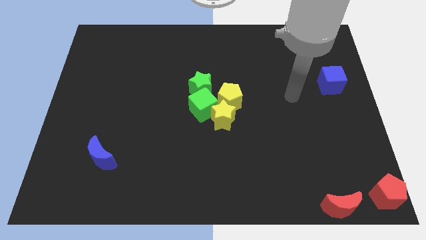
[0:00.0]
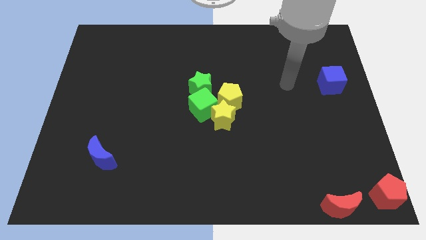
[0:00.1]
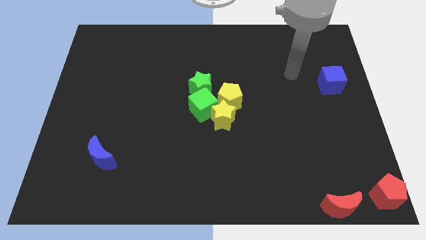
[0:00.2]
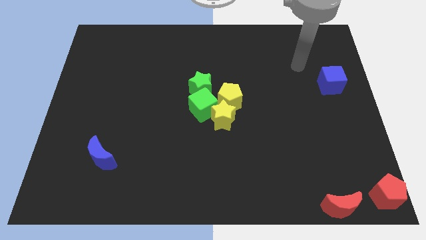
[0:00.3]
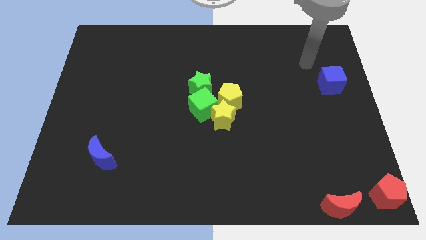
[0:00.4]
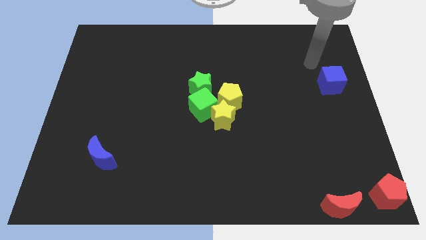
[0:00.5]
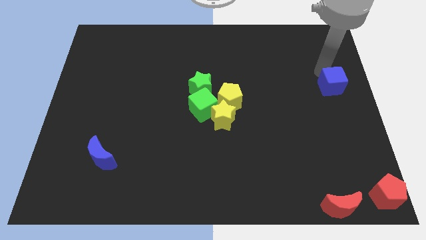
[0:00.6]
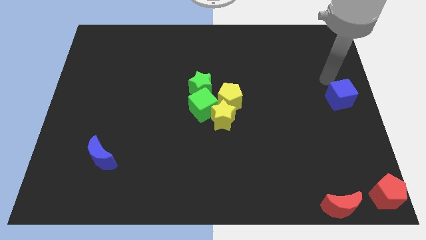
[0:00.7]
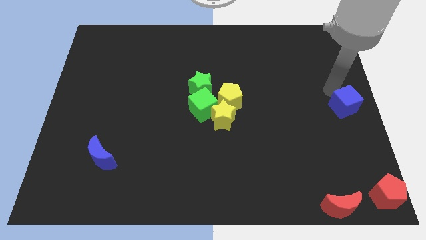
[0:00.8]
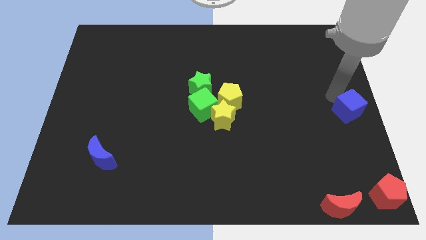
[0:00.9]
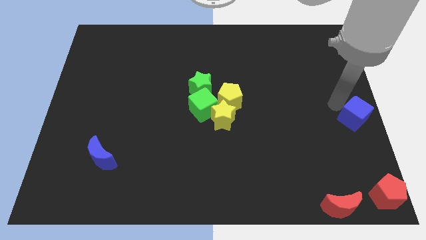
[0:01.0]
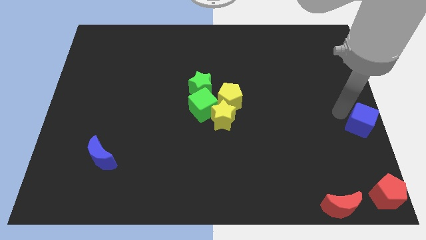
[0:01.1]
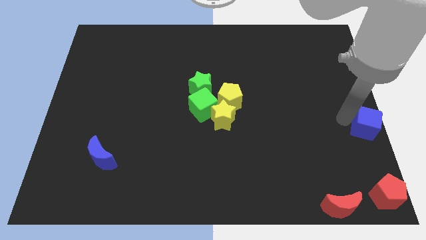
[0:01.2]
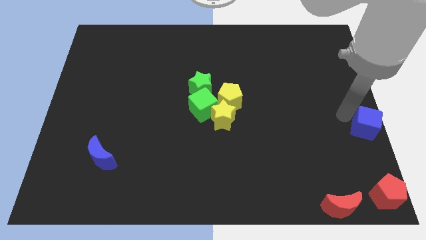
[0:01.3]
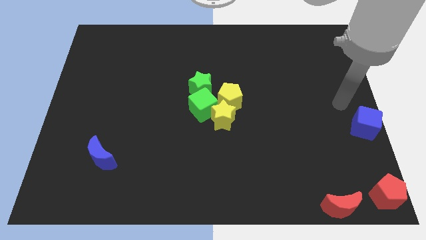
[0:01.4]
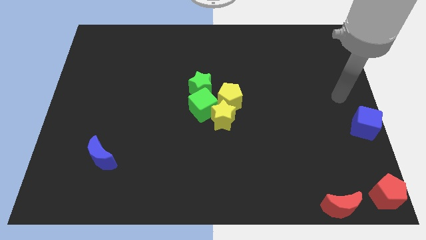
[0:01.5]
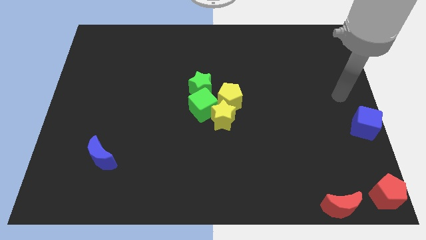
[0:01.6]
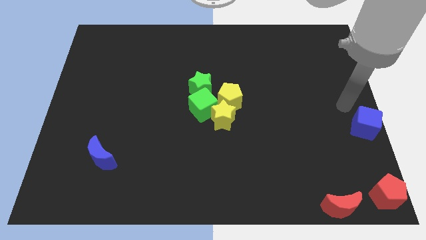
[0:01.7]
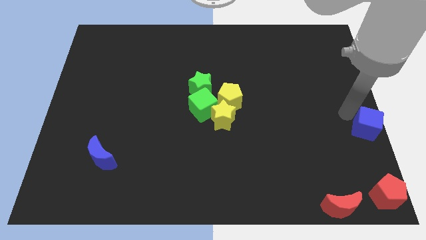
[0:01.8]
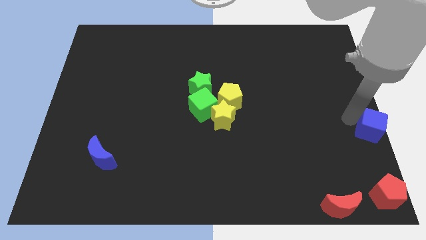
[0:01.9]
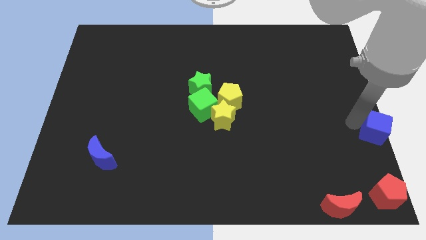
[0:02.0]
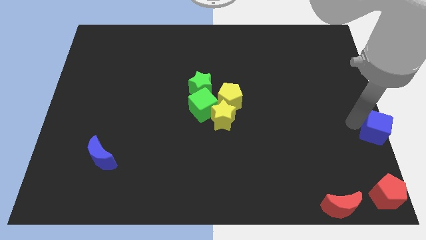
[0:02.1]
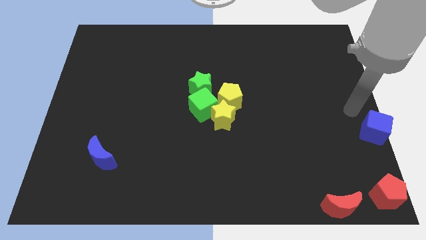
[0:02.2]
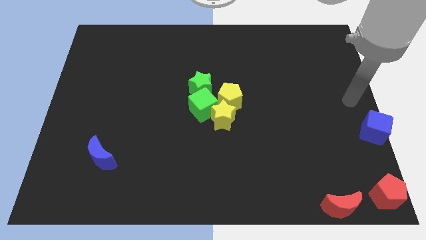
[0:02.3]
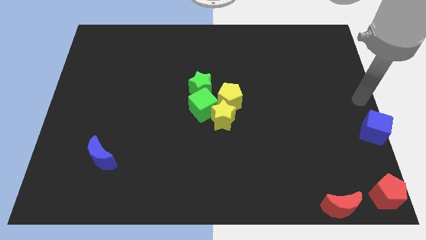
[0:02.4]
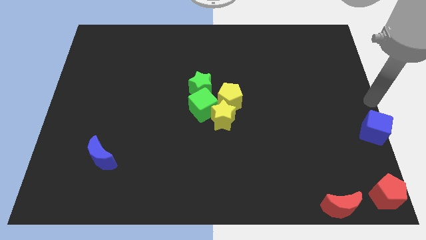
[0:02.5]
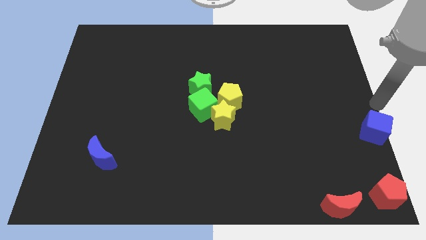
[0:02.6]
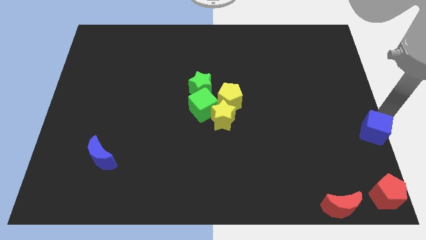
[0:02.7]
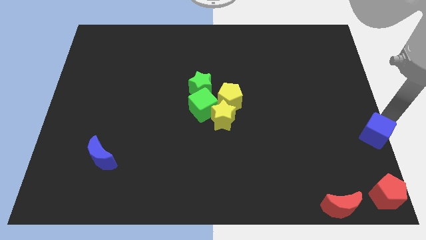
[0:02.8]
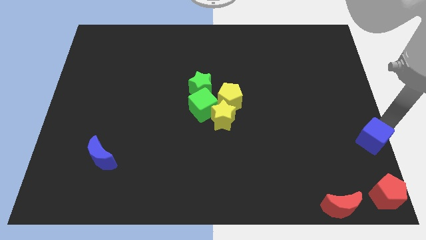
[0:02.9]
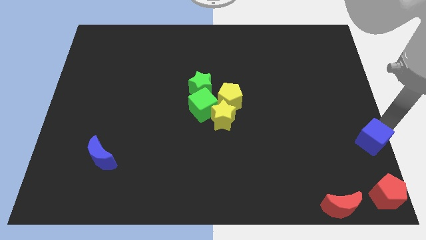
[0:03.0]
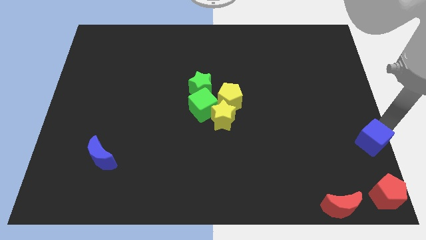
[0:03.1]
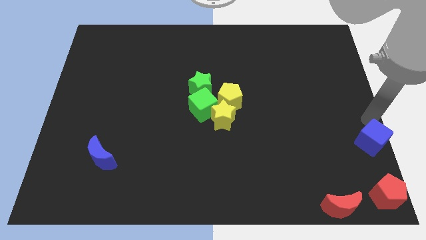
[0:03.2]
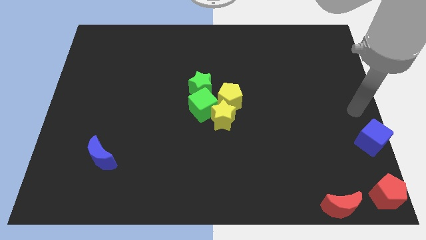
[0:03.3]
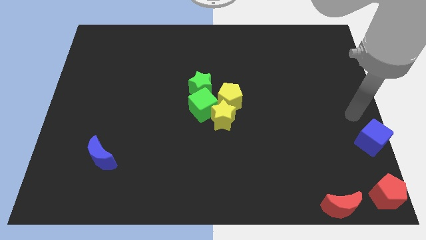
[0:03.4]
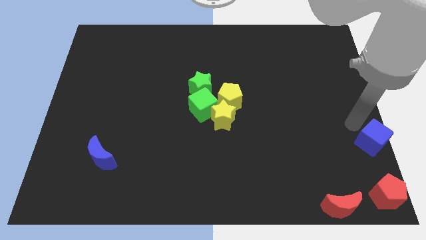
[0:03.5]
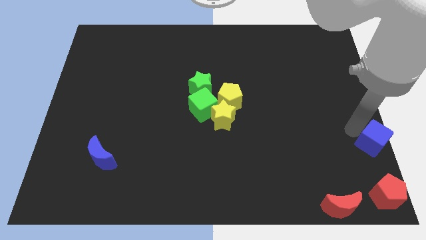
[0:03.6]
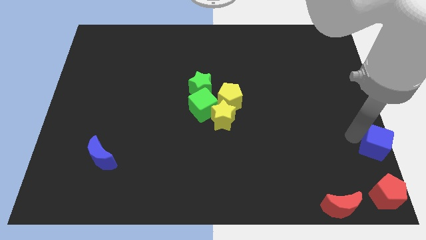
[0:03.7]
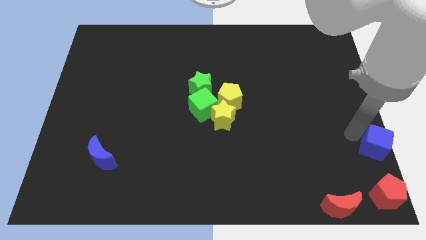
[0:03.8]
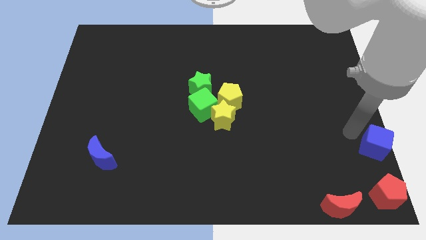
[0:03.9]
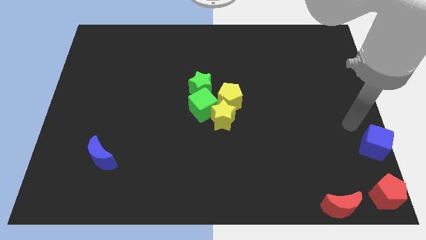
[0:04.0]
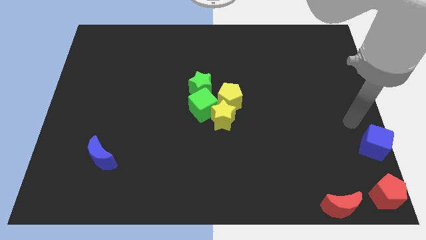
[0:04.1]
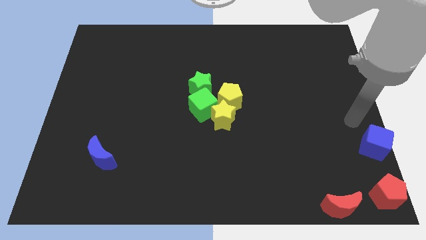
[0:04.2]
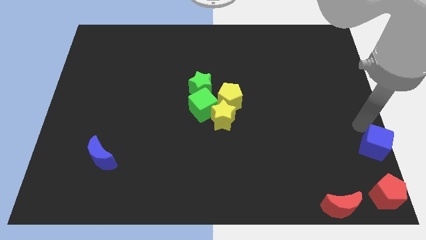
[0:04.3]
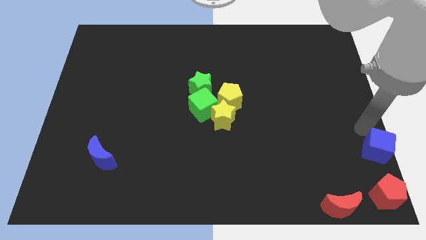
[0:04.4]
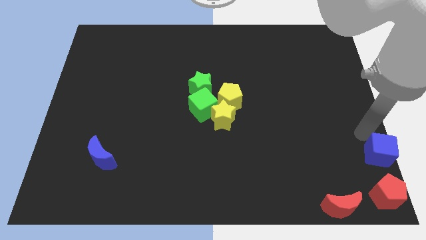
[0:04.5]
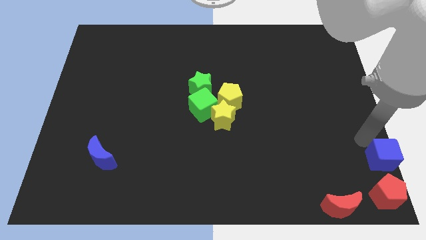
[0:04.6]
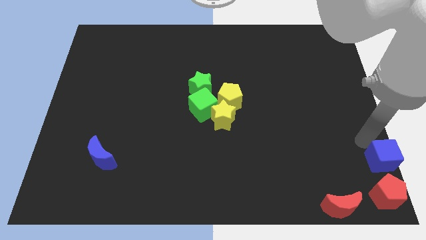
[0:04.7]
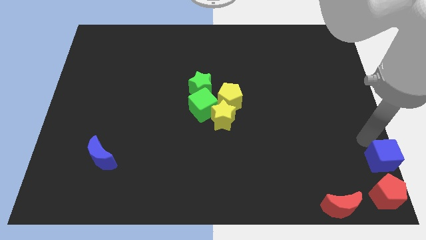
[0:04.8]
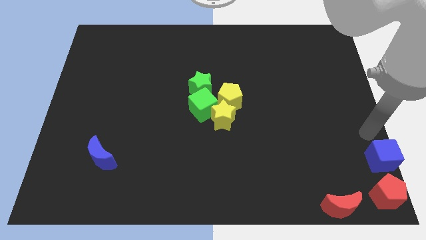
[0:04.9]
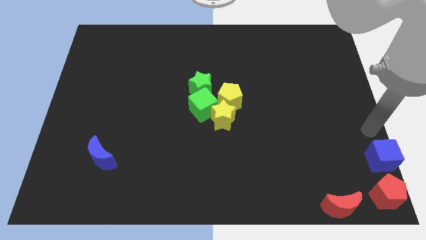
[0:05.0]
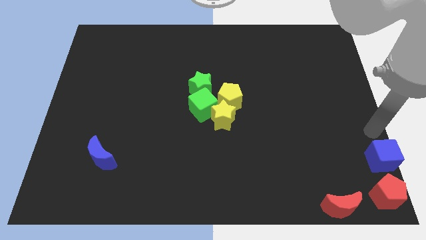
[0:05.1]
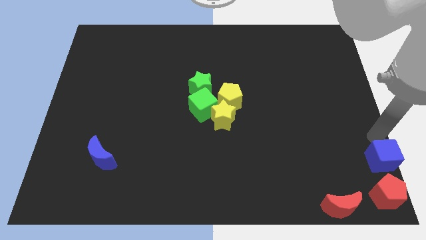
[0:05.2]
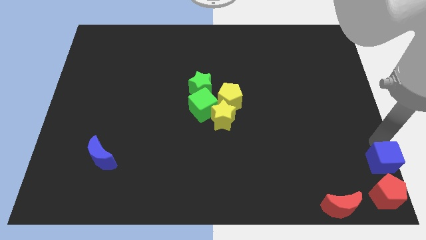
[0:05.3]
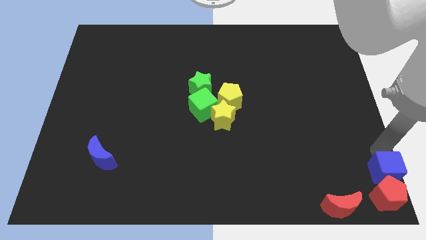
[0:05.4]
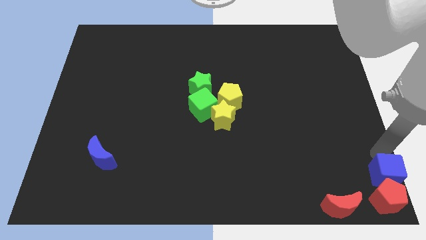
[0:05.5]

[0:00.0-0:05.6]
push the blue cube into the red pentagon

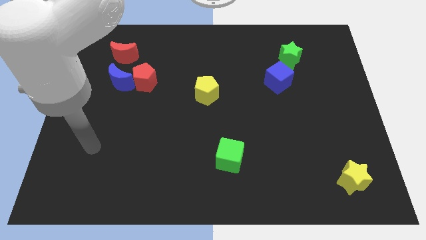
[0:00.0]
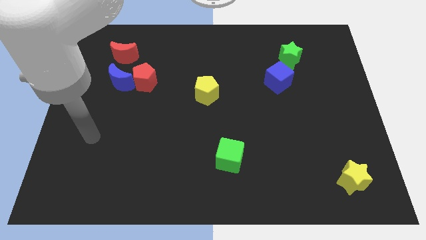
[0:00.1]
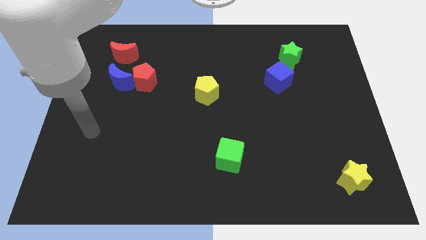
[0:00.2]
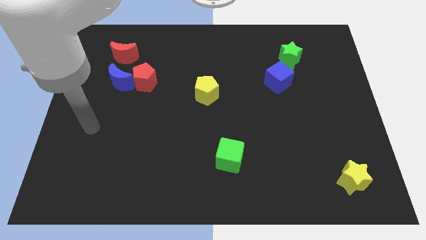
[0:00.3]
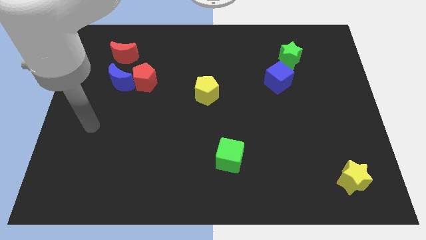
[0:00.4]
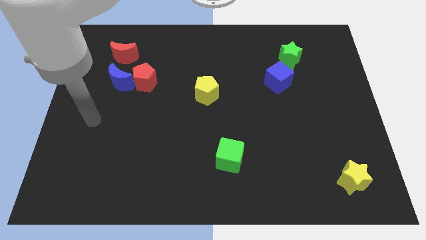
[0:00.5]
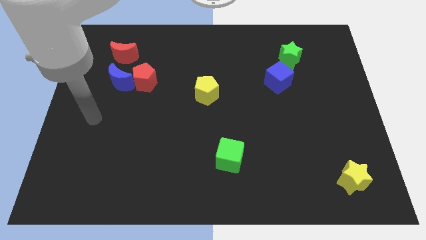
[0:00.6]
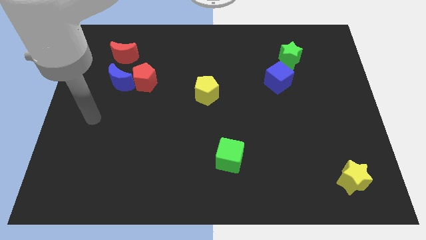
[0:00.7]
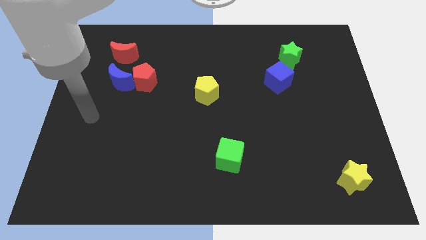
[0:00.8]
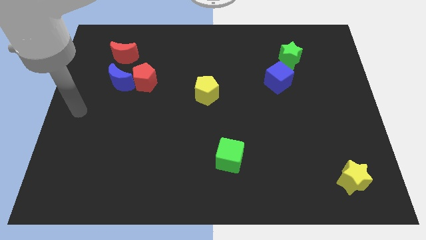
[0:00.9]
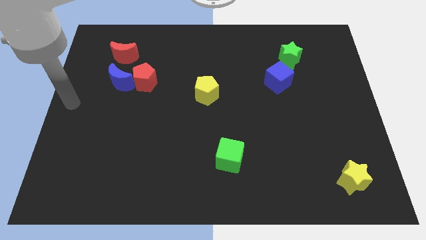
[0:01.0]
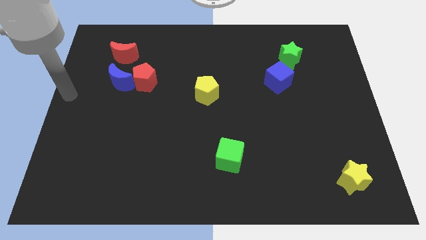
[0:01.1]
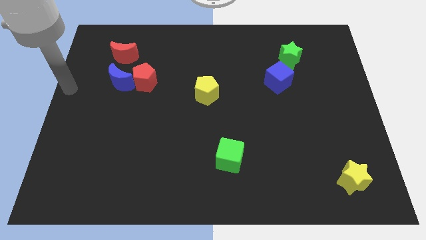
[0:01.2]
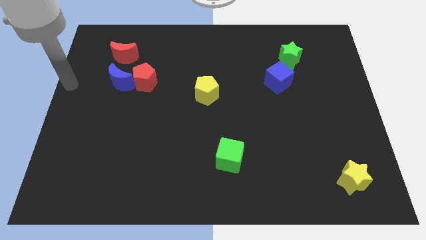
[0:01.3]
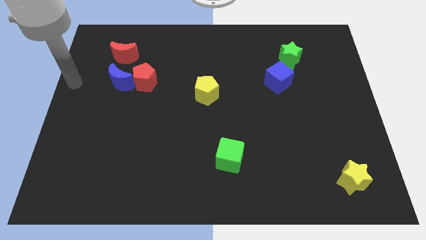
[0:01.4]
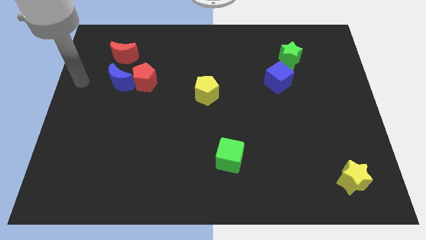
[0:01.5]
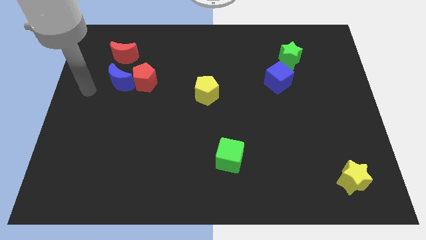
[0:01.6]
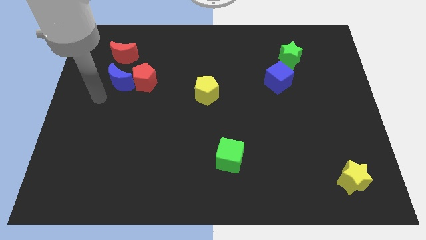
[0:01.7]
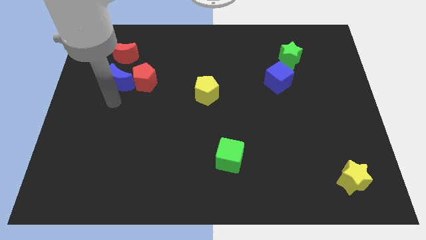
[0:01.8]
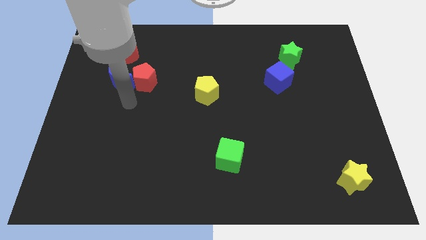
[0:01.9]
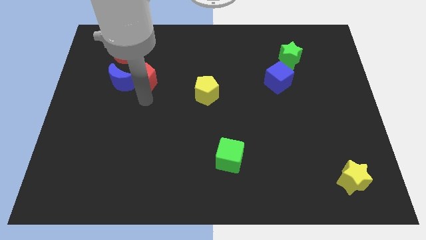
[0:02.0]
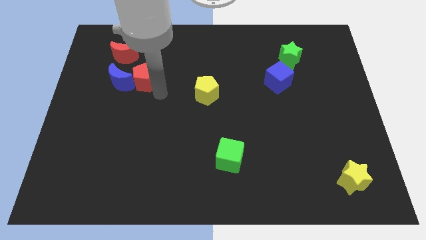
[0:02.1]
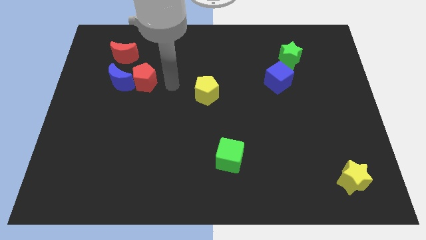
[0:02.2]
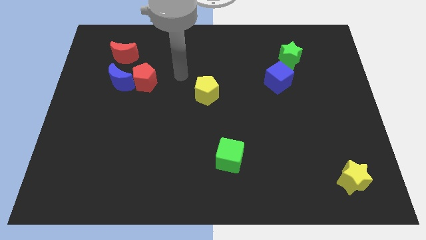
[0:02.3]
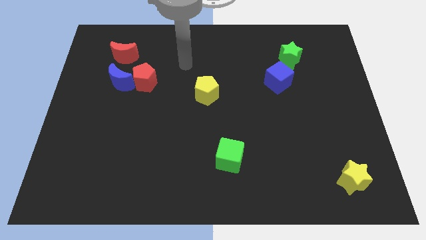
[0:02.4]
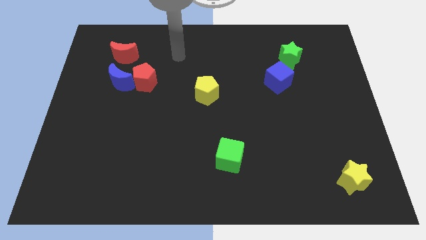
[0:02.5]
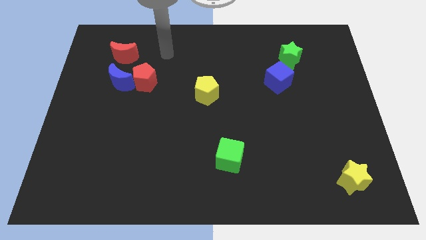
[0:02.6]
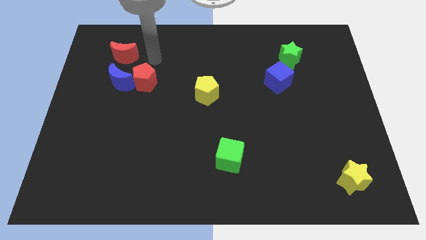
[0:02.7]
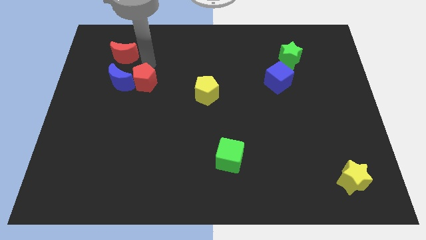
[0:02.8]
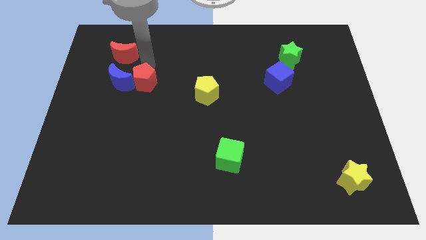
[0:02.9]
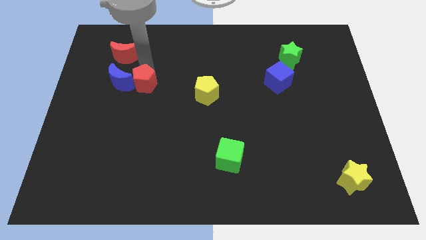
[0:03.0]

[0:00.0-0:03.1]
go near the red pentagon

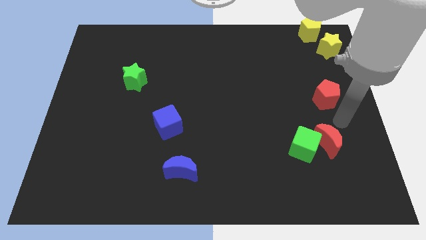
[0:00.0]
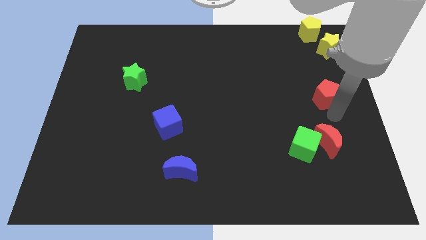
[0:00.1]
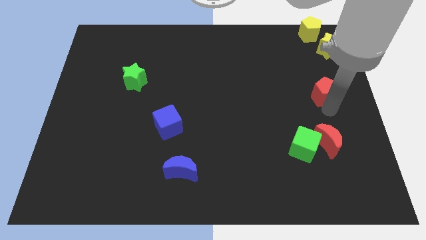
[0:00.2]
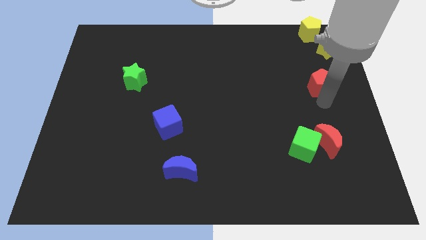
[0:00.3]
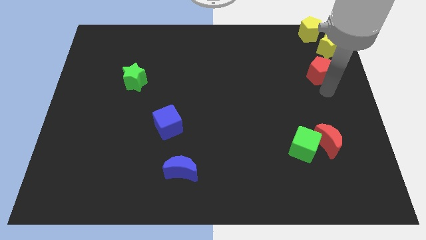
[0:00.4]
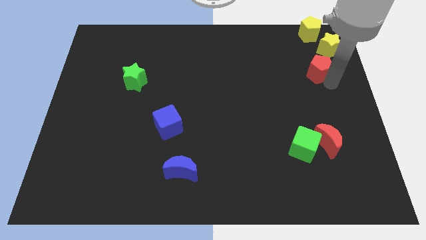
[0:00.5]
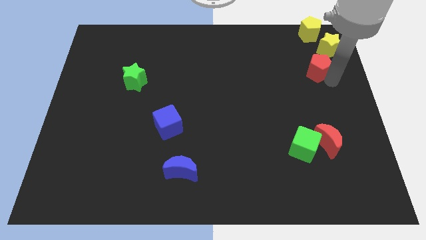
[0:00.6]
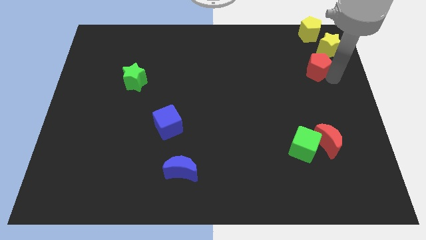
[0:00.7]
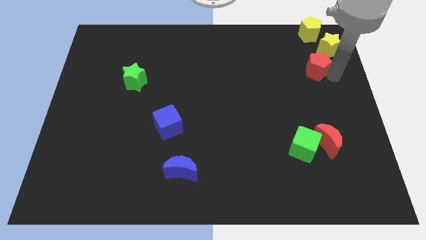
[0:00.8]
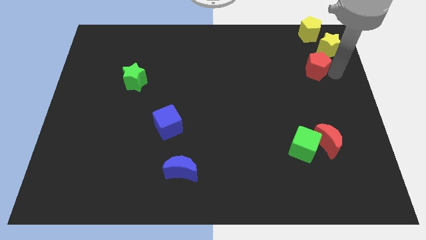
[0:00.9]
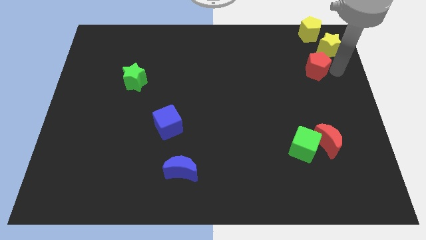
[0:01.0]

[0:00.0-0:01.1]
slightly move the red pentagon below to the yellow star
